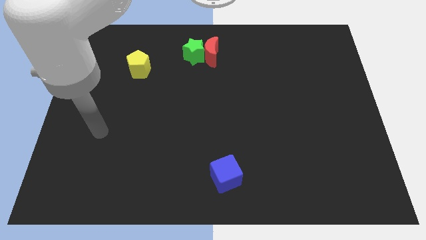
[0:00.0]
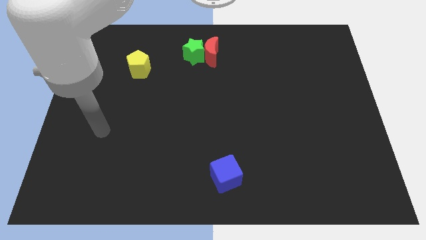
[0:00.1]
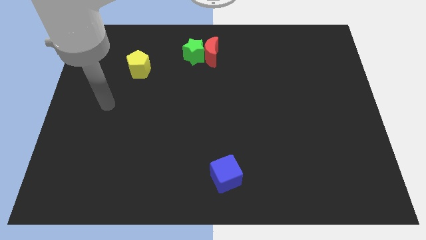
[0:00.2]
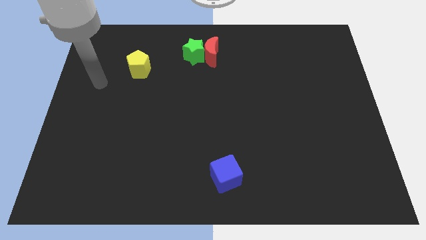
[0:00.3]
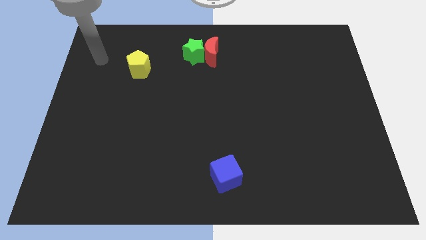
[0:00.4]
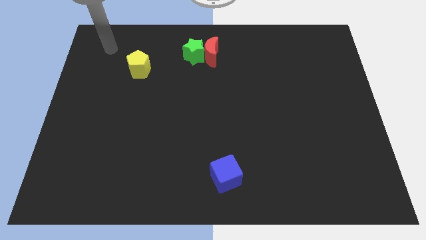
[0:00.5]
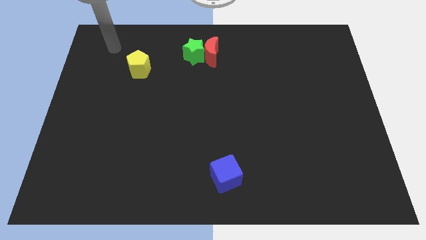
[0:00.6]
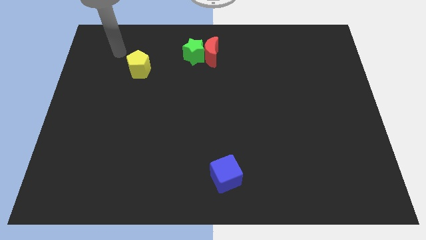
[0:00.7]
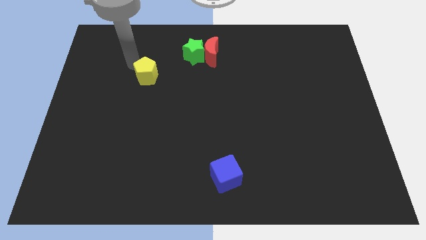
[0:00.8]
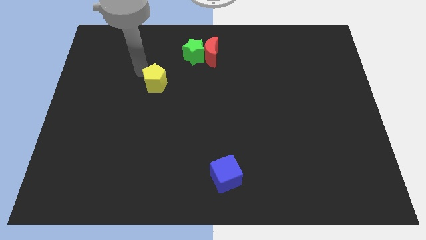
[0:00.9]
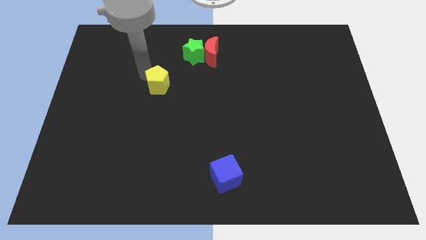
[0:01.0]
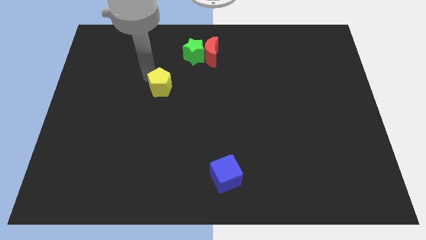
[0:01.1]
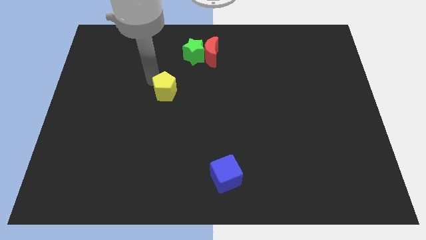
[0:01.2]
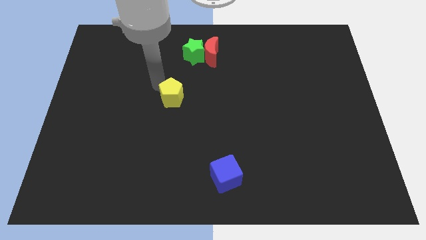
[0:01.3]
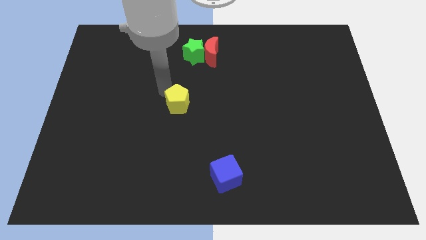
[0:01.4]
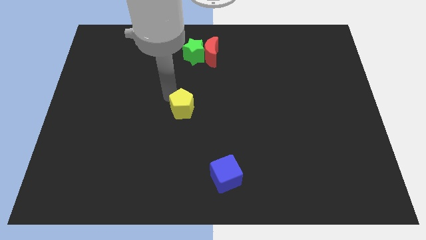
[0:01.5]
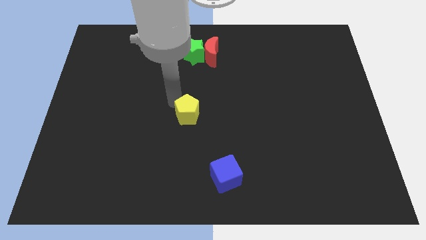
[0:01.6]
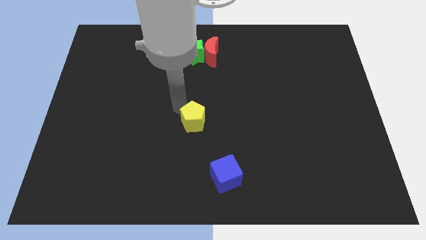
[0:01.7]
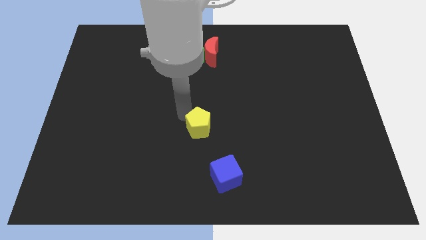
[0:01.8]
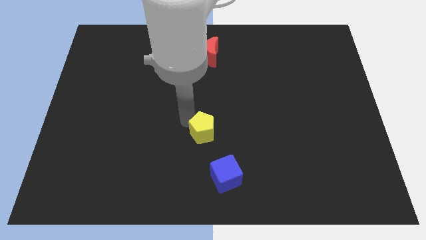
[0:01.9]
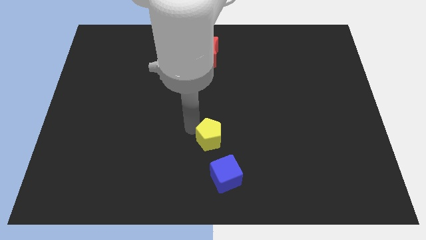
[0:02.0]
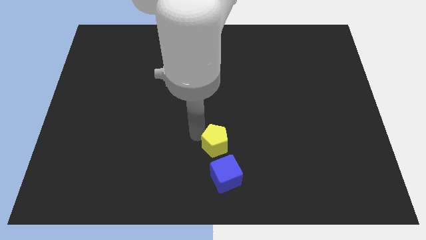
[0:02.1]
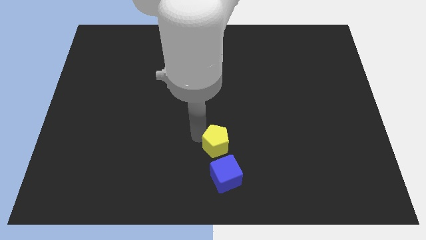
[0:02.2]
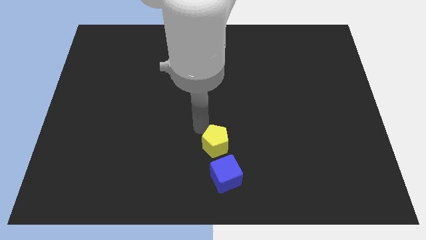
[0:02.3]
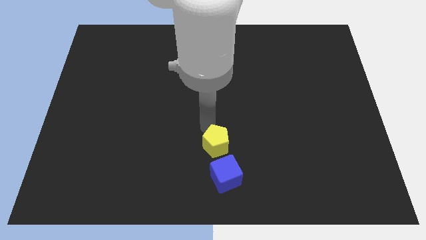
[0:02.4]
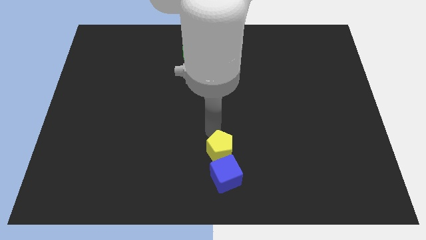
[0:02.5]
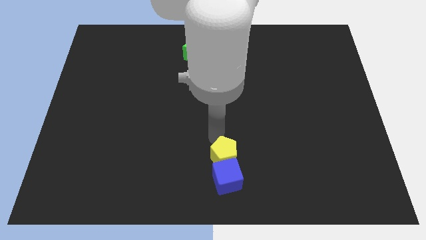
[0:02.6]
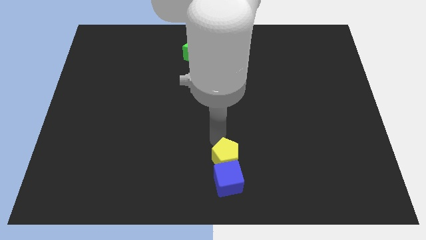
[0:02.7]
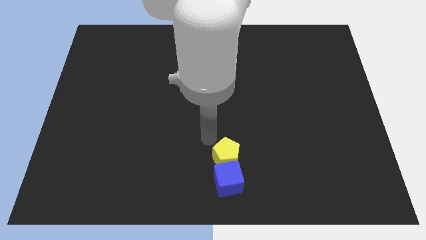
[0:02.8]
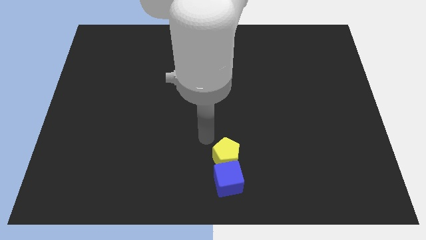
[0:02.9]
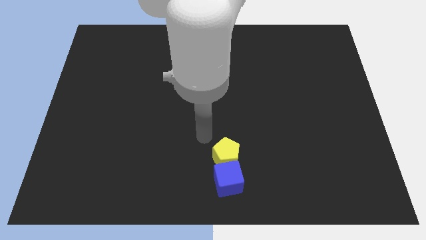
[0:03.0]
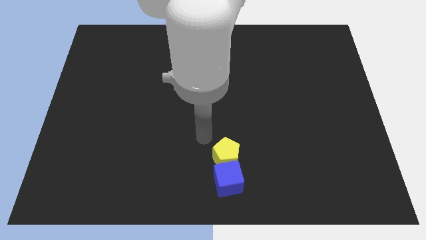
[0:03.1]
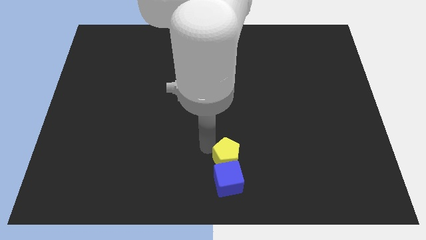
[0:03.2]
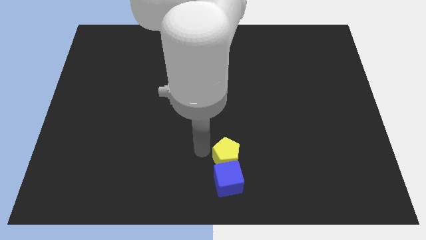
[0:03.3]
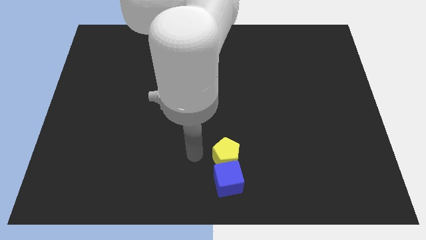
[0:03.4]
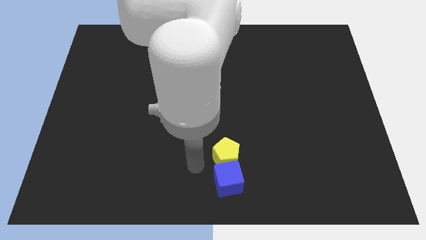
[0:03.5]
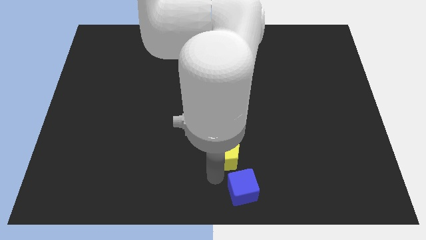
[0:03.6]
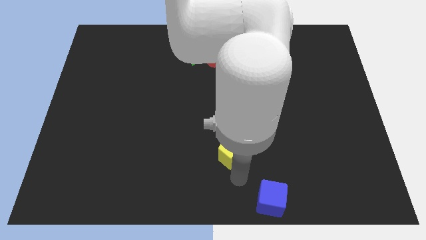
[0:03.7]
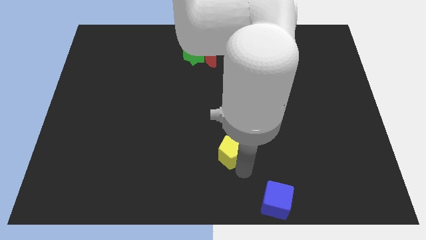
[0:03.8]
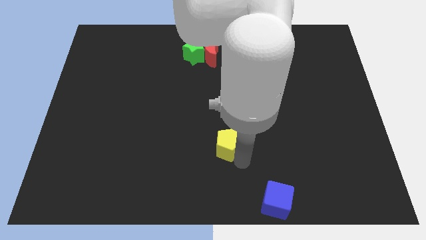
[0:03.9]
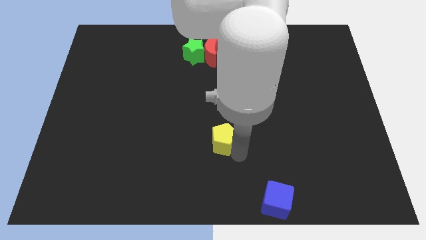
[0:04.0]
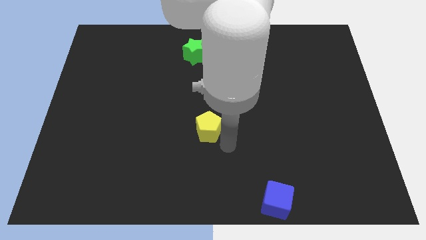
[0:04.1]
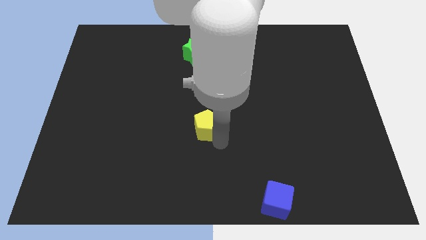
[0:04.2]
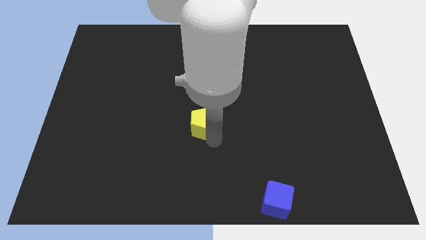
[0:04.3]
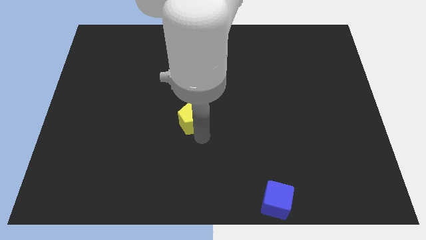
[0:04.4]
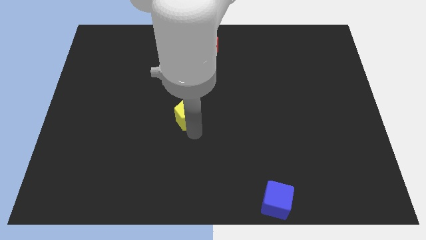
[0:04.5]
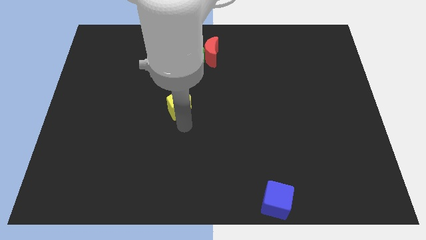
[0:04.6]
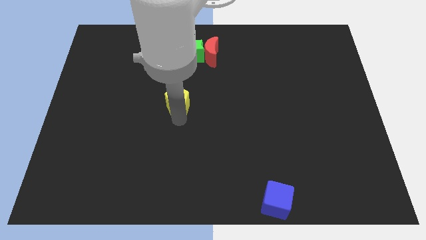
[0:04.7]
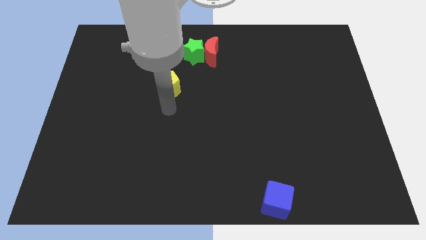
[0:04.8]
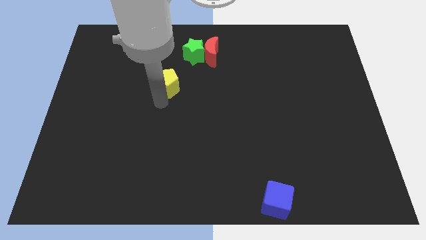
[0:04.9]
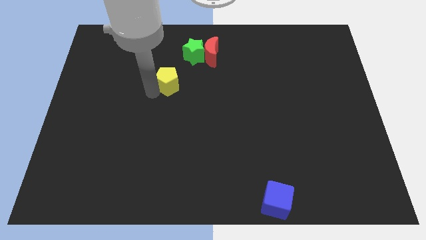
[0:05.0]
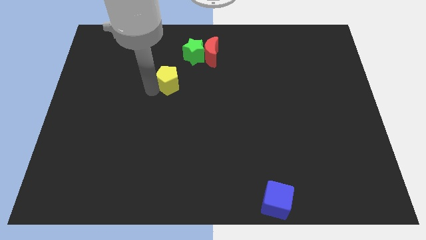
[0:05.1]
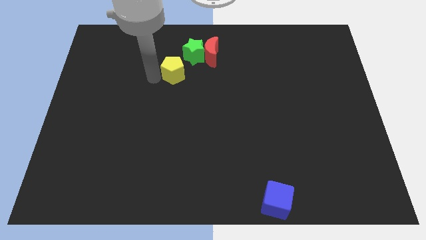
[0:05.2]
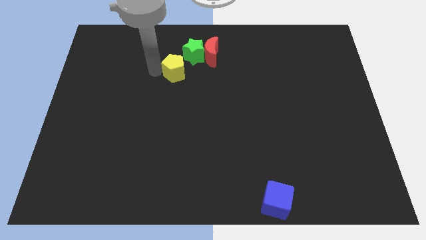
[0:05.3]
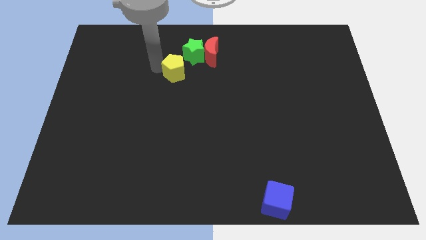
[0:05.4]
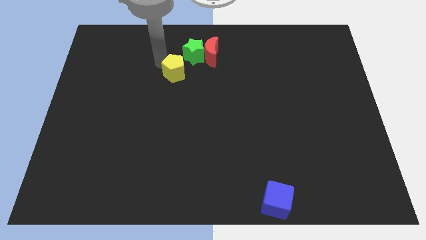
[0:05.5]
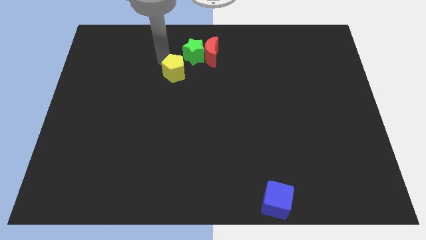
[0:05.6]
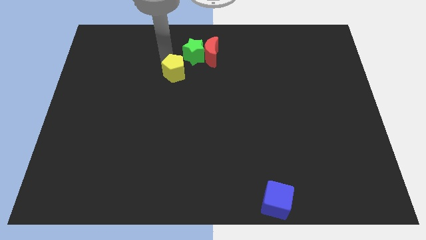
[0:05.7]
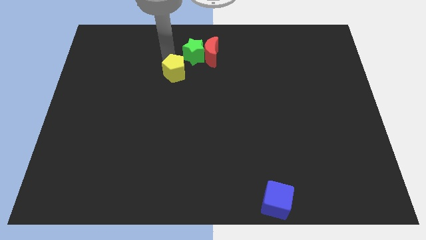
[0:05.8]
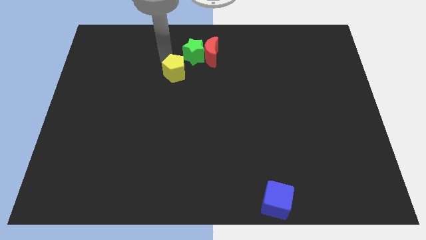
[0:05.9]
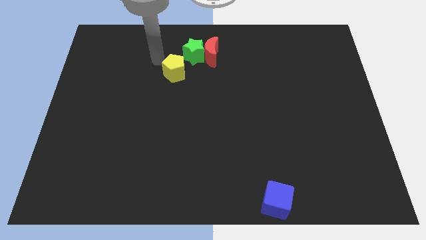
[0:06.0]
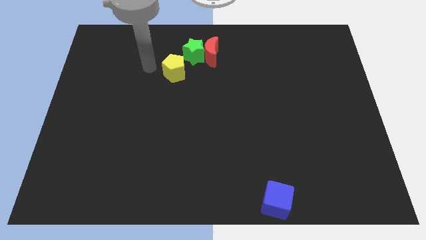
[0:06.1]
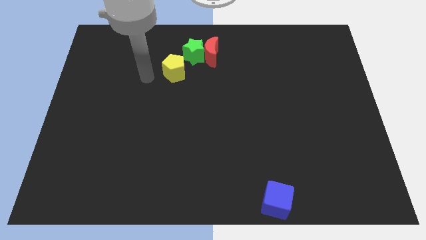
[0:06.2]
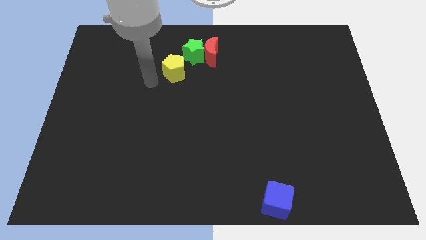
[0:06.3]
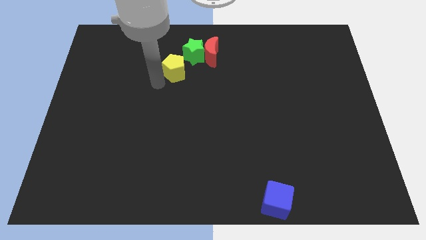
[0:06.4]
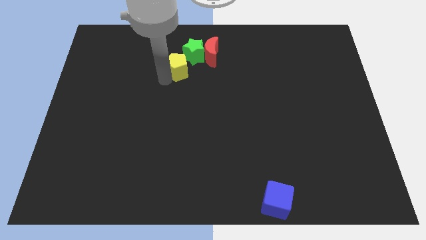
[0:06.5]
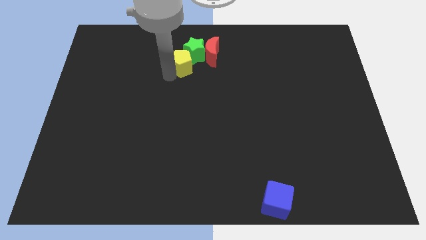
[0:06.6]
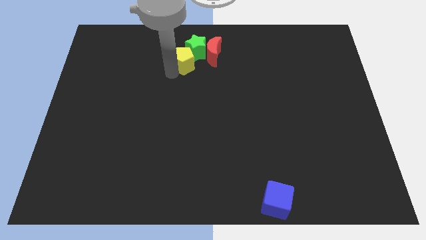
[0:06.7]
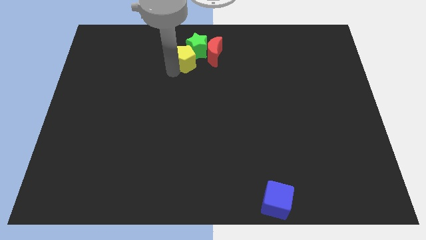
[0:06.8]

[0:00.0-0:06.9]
put the yellow block towards the green block

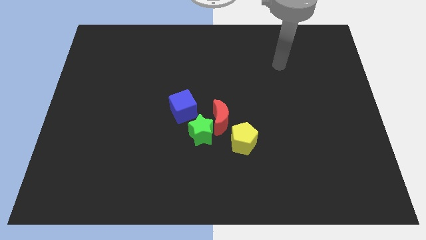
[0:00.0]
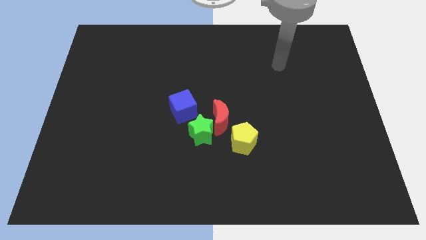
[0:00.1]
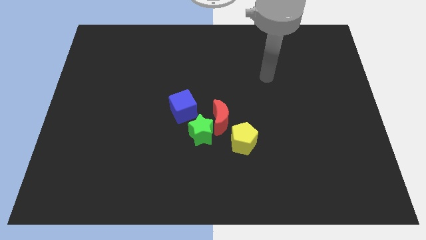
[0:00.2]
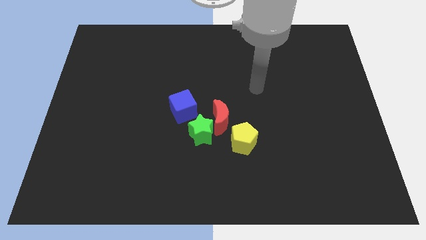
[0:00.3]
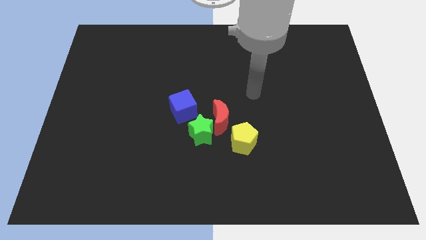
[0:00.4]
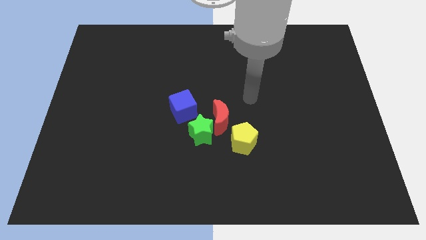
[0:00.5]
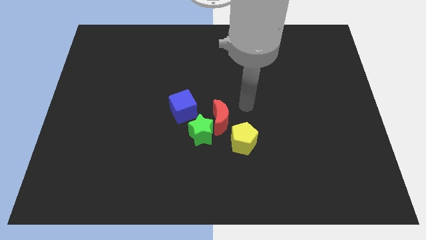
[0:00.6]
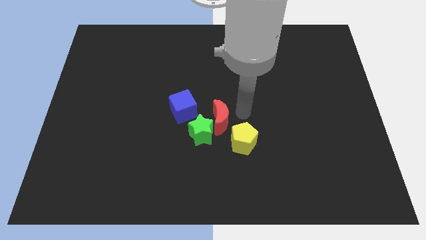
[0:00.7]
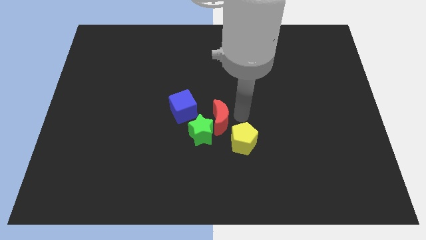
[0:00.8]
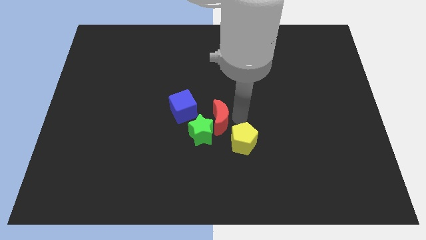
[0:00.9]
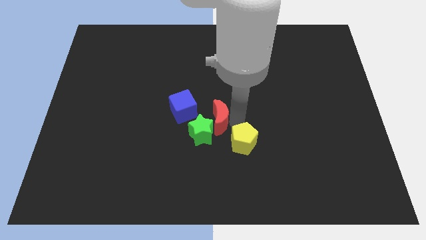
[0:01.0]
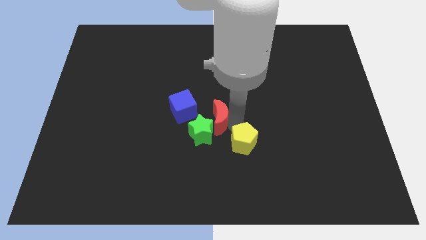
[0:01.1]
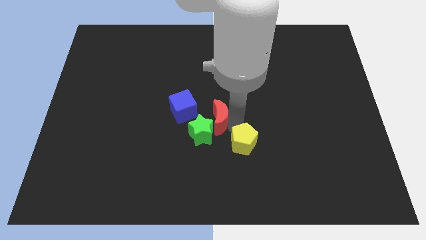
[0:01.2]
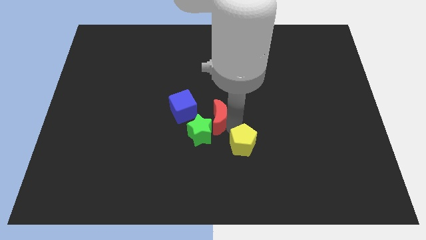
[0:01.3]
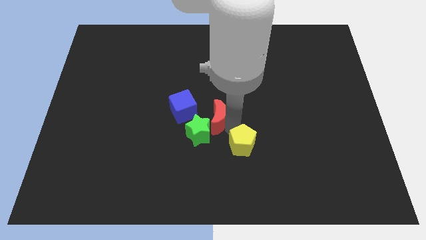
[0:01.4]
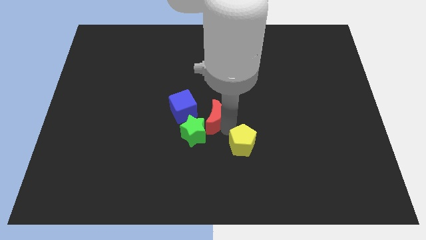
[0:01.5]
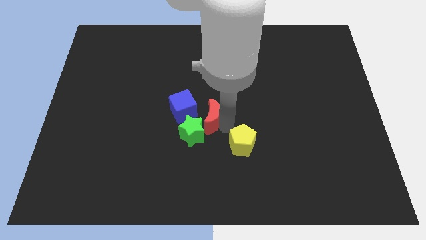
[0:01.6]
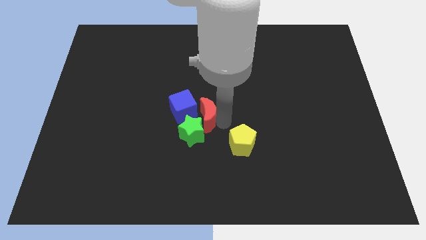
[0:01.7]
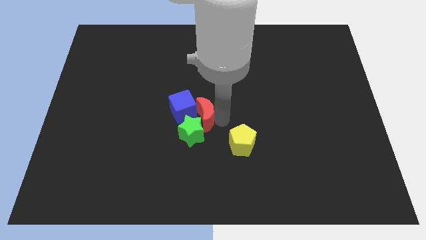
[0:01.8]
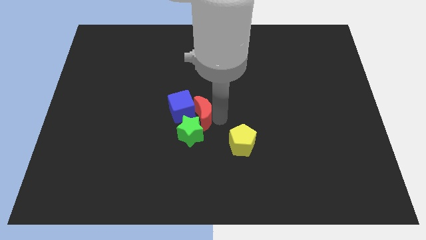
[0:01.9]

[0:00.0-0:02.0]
push the moon close to the blue cube
